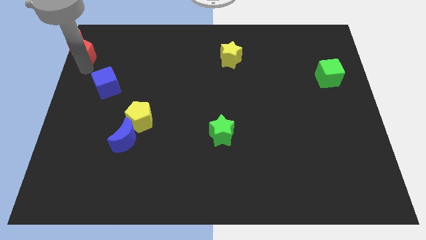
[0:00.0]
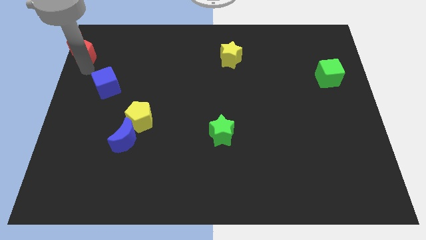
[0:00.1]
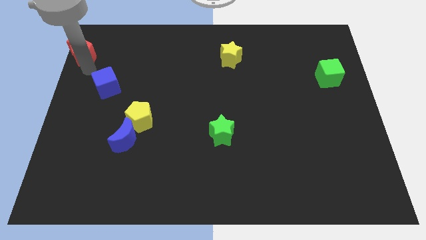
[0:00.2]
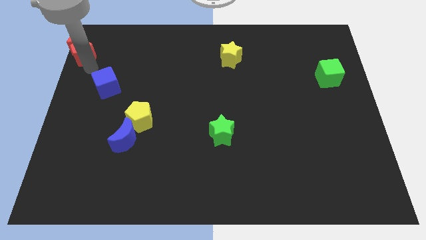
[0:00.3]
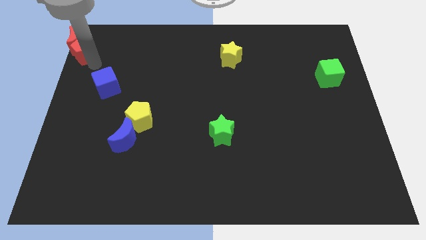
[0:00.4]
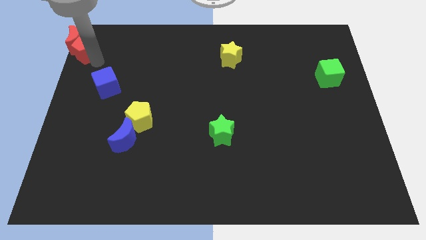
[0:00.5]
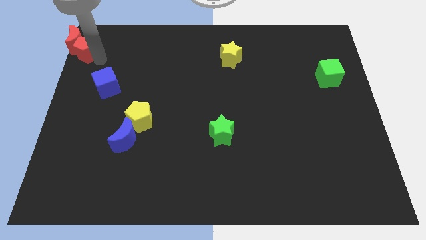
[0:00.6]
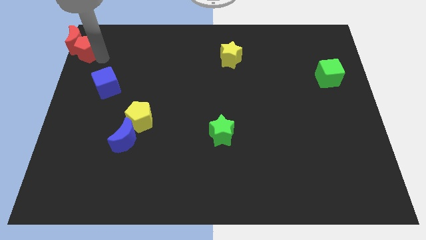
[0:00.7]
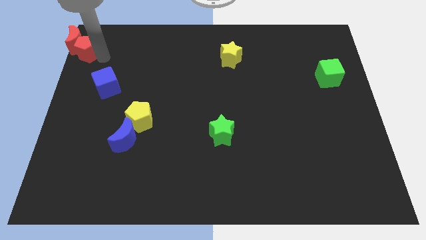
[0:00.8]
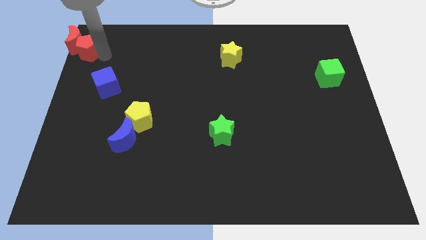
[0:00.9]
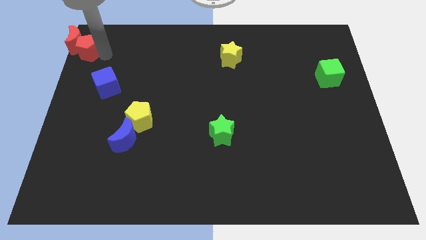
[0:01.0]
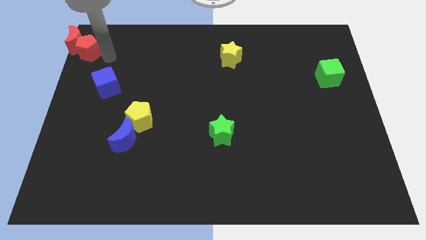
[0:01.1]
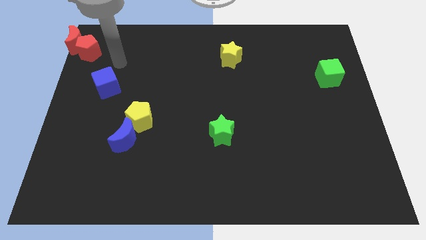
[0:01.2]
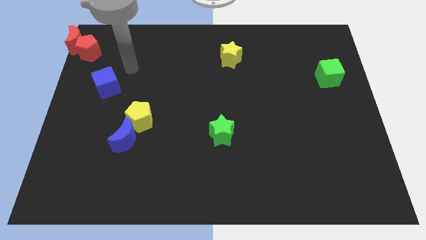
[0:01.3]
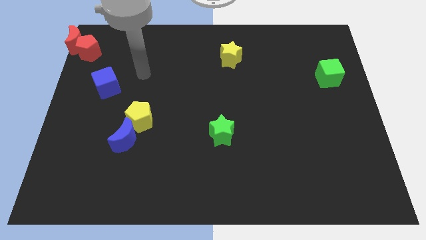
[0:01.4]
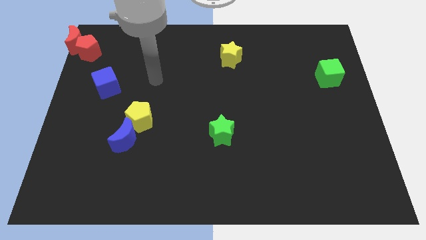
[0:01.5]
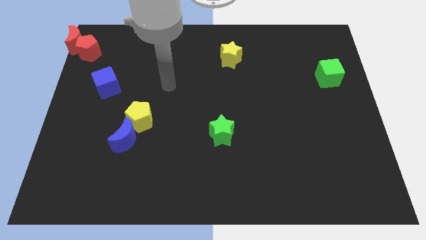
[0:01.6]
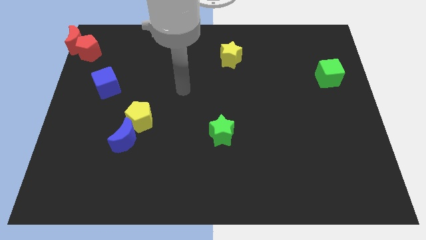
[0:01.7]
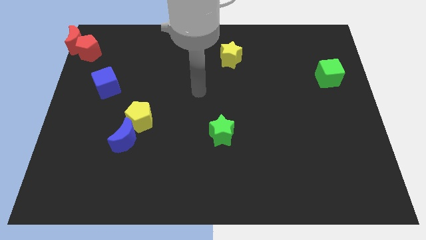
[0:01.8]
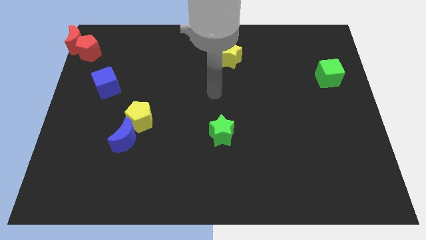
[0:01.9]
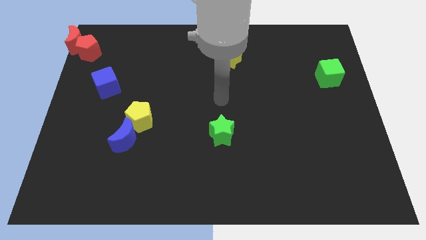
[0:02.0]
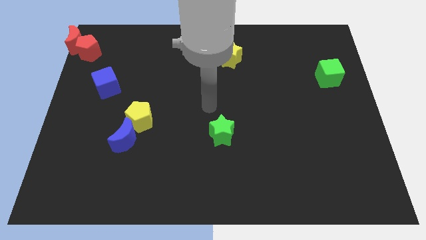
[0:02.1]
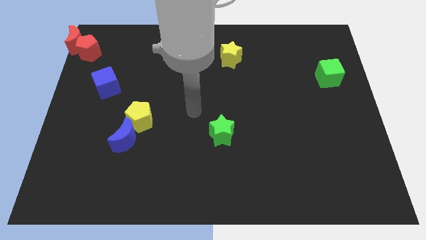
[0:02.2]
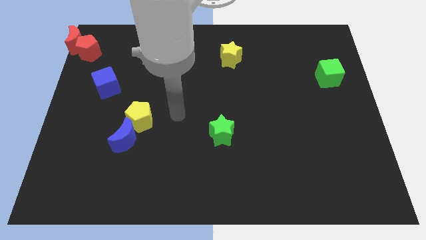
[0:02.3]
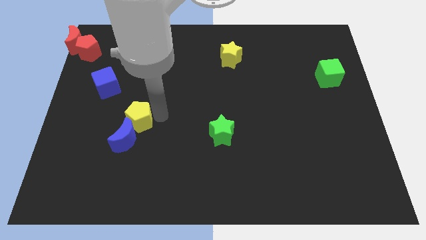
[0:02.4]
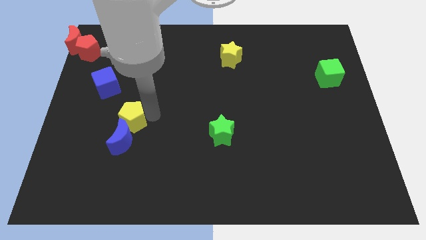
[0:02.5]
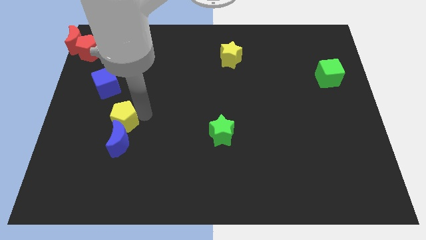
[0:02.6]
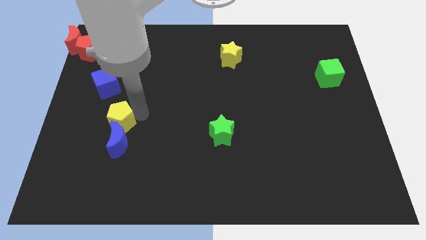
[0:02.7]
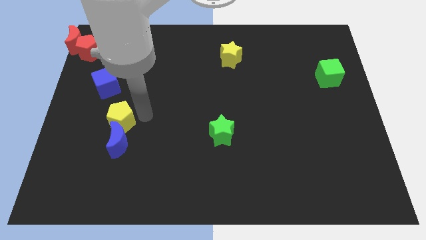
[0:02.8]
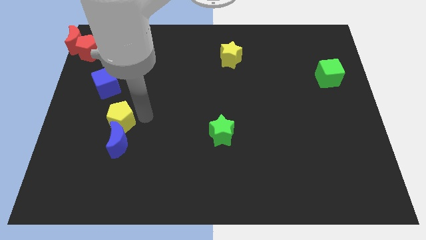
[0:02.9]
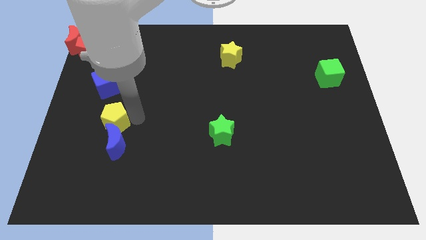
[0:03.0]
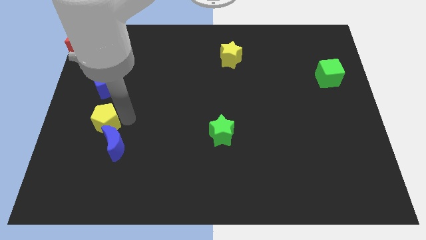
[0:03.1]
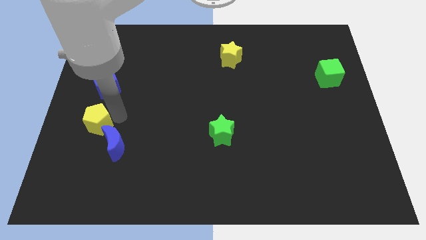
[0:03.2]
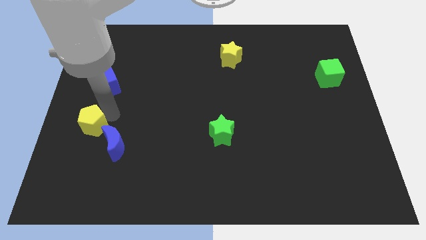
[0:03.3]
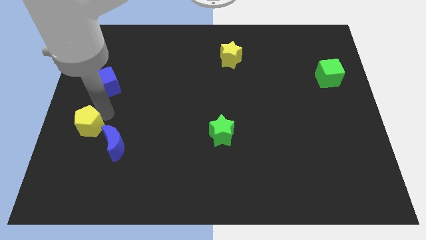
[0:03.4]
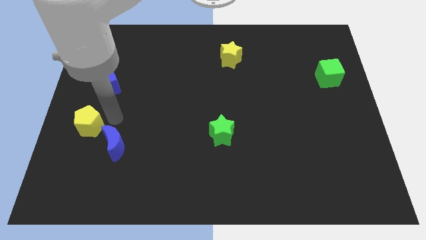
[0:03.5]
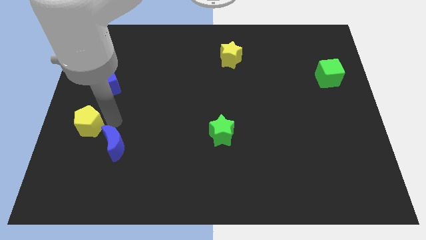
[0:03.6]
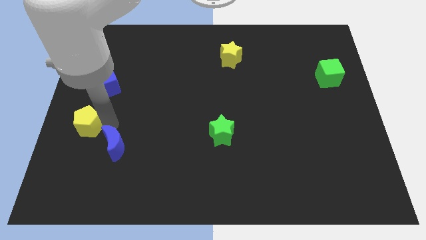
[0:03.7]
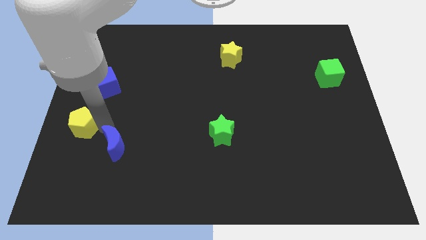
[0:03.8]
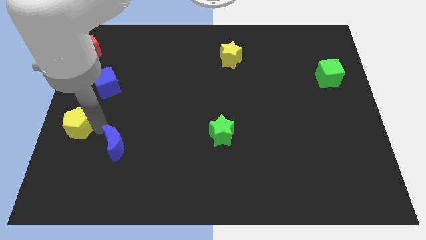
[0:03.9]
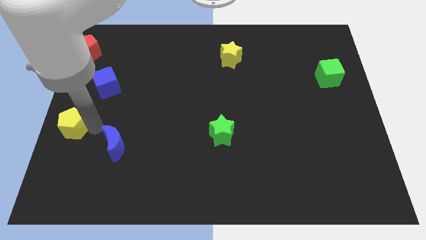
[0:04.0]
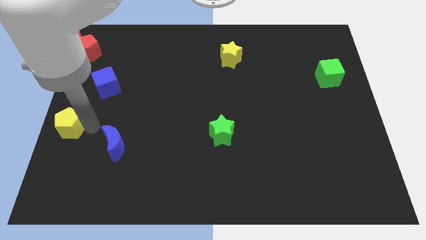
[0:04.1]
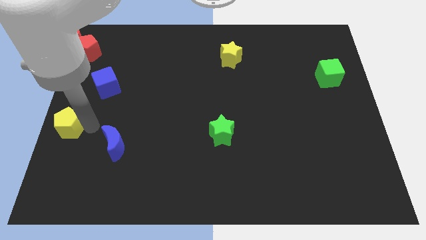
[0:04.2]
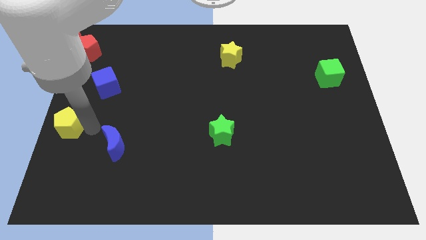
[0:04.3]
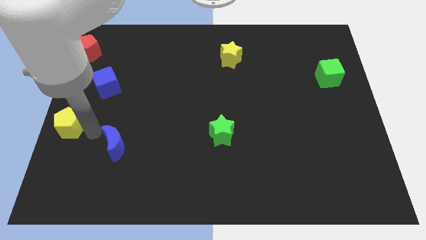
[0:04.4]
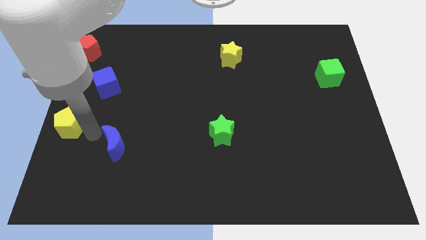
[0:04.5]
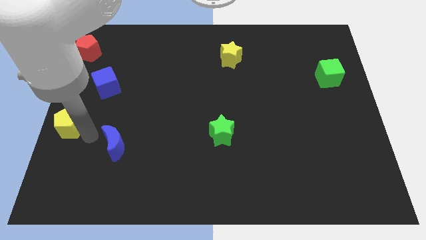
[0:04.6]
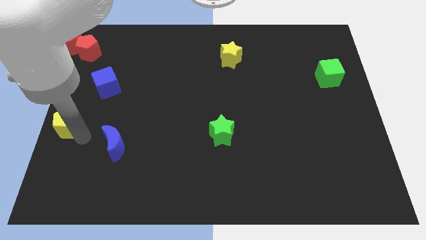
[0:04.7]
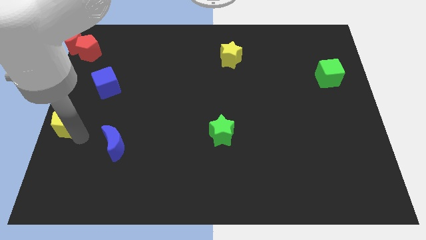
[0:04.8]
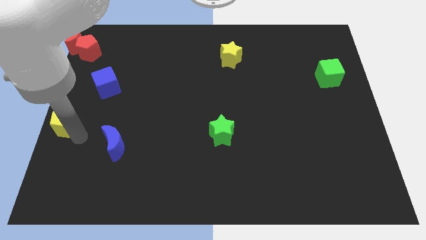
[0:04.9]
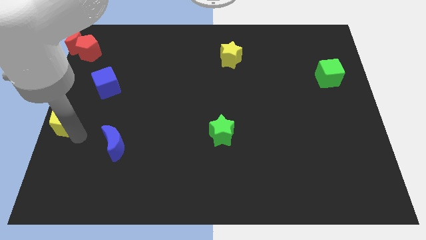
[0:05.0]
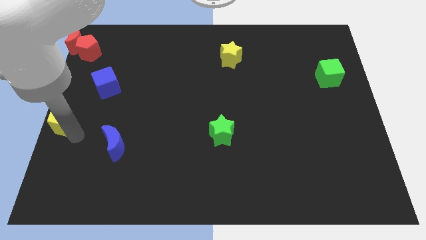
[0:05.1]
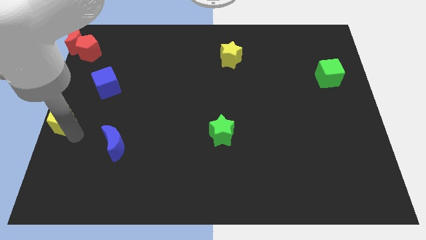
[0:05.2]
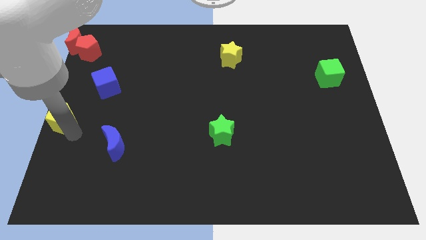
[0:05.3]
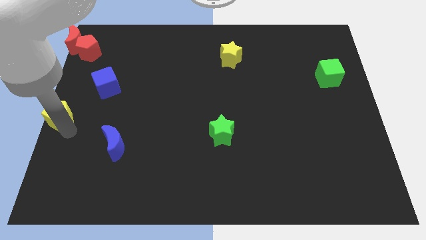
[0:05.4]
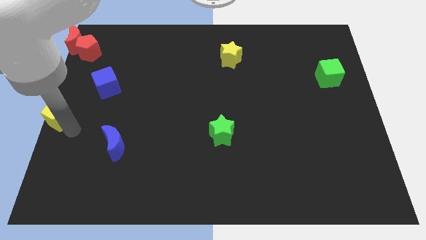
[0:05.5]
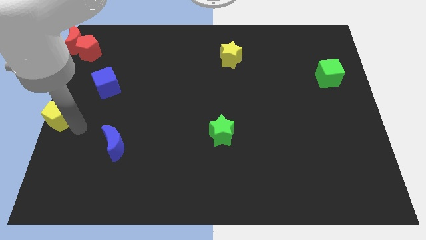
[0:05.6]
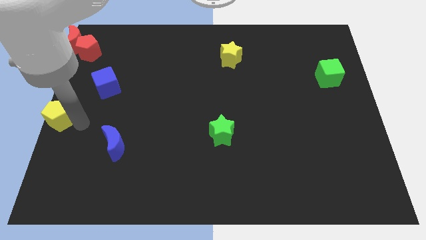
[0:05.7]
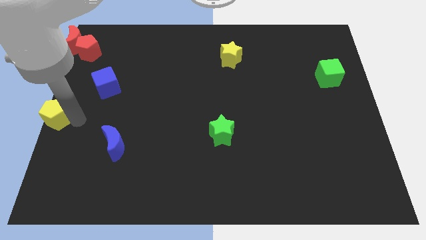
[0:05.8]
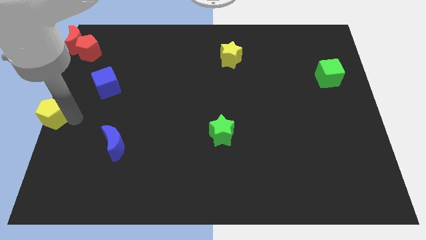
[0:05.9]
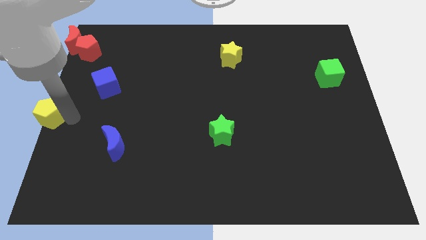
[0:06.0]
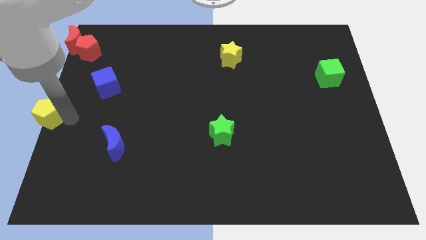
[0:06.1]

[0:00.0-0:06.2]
push the yellow pentagon to the center left

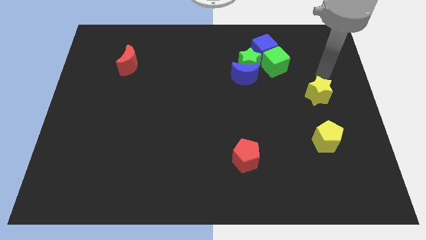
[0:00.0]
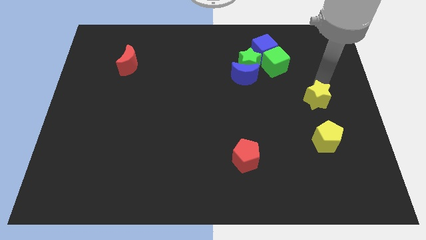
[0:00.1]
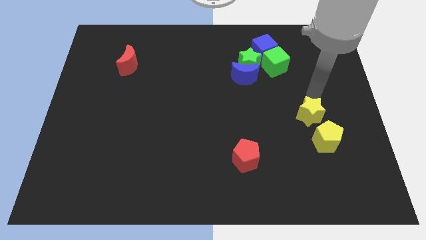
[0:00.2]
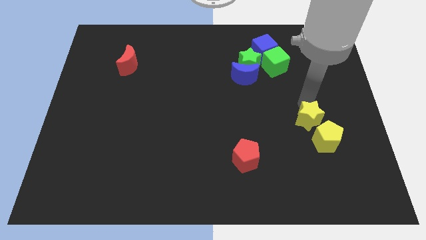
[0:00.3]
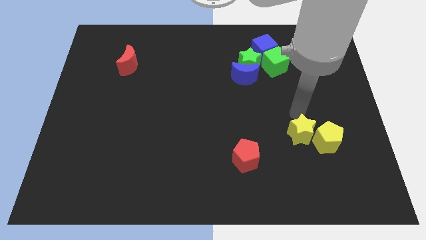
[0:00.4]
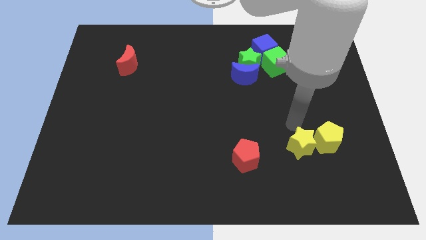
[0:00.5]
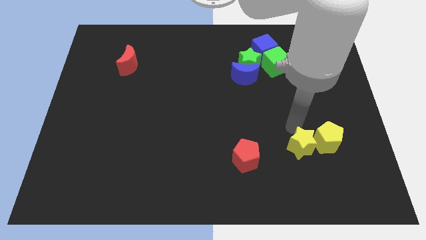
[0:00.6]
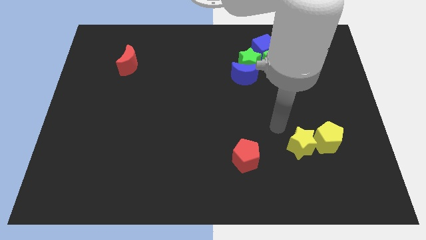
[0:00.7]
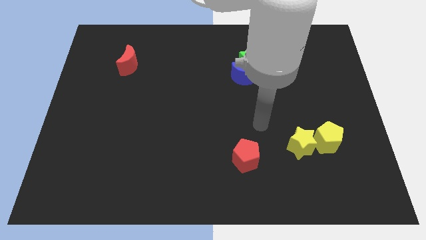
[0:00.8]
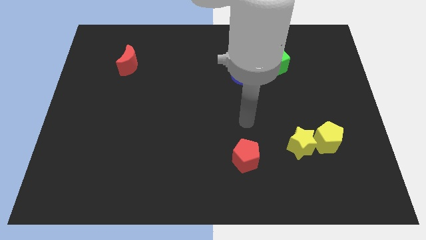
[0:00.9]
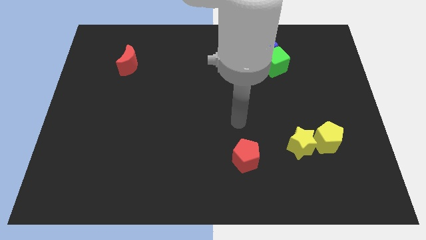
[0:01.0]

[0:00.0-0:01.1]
place yellow star beside yellow pentagon

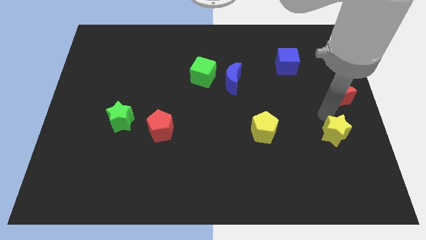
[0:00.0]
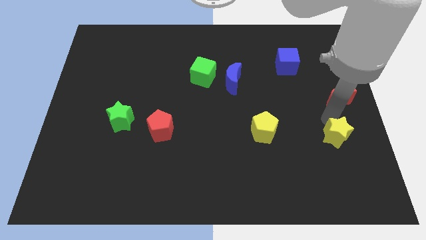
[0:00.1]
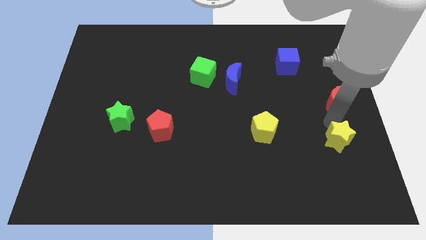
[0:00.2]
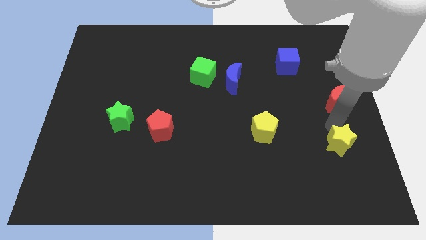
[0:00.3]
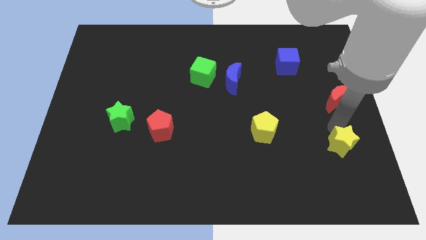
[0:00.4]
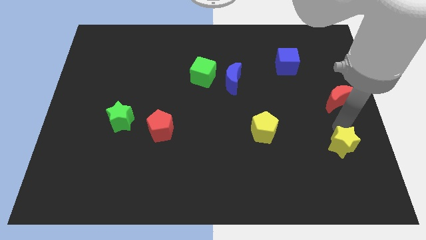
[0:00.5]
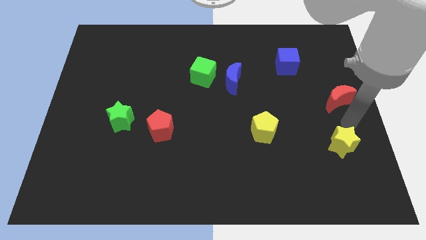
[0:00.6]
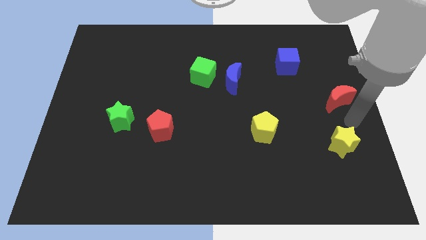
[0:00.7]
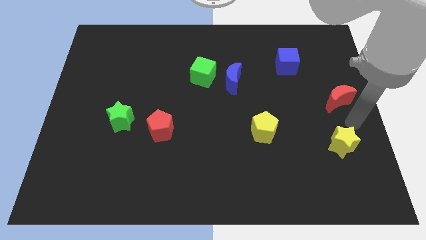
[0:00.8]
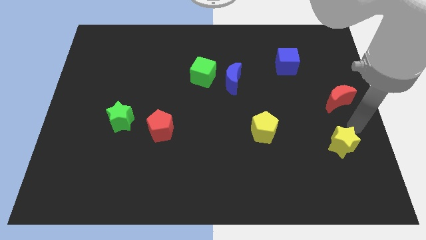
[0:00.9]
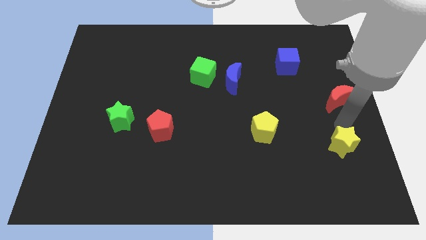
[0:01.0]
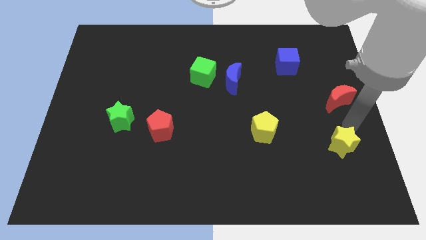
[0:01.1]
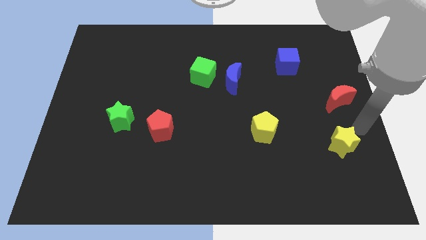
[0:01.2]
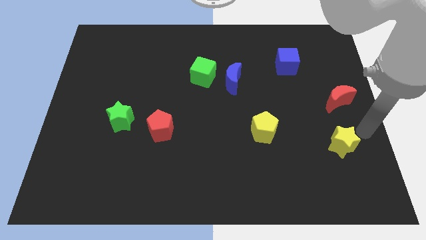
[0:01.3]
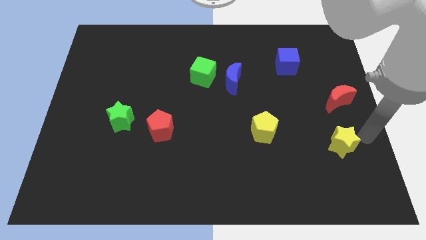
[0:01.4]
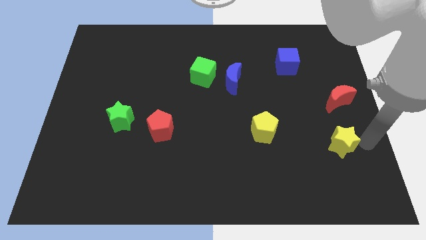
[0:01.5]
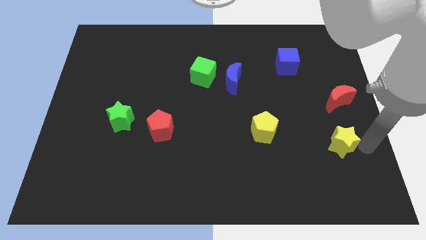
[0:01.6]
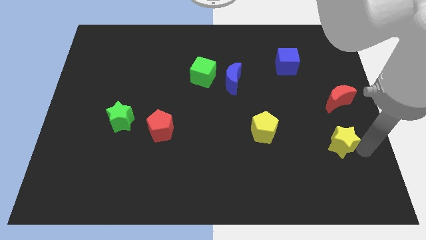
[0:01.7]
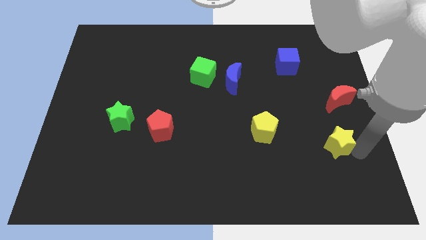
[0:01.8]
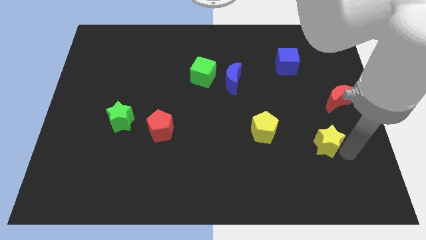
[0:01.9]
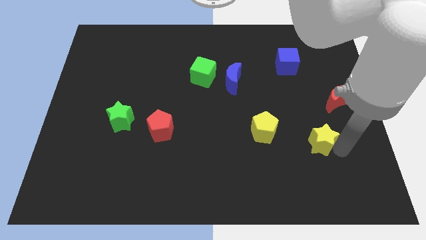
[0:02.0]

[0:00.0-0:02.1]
place the yellow star diagonally to the bottom left to the red moon
